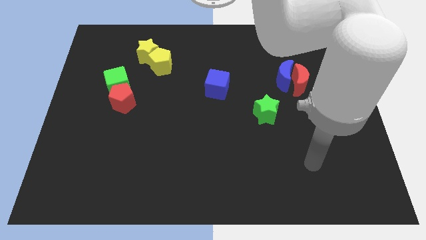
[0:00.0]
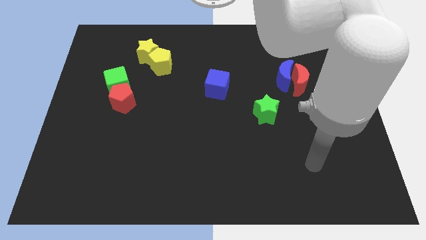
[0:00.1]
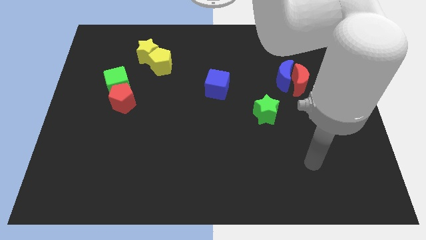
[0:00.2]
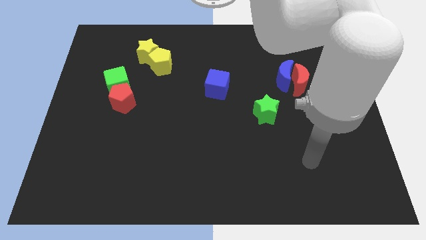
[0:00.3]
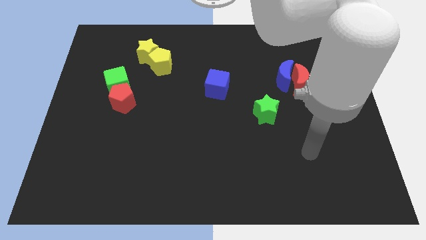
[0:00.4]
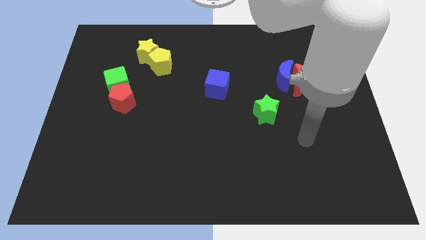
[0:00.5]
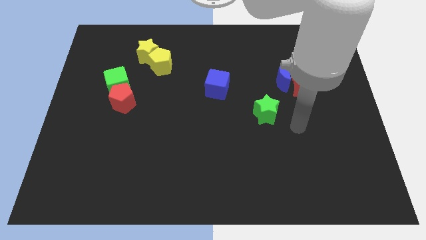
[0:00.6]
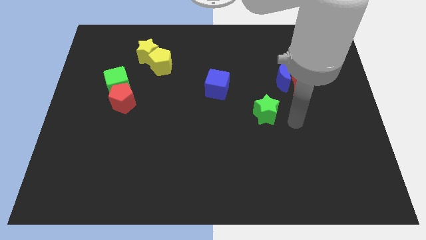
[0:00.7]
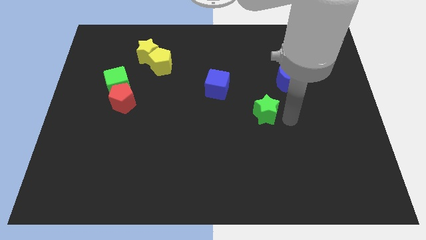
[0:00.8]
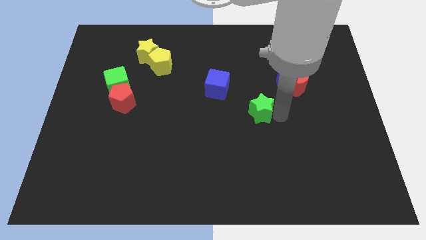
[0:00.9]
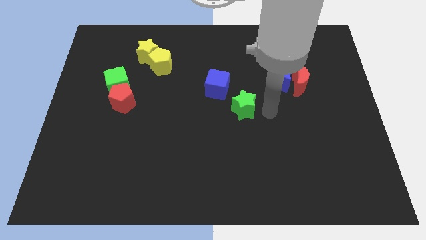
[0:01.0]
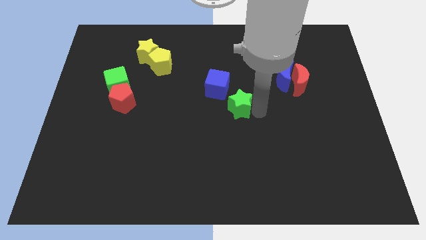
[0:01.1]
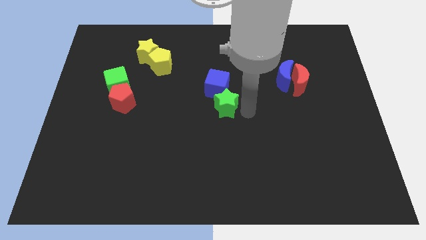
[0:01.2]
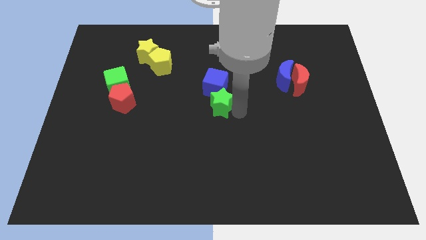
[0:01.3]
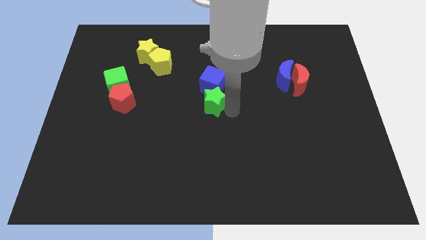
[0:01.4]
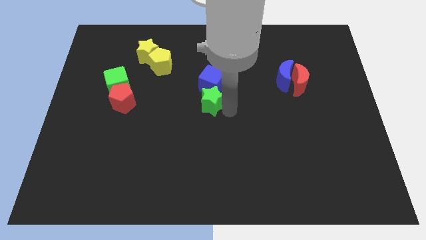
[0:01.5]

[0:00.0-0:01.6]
push the green star below the blue cube

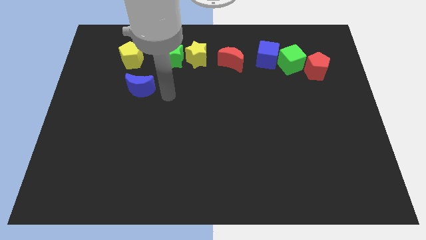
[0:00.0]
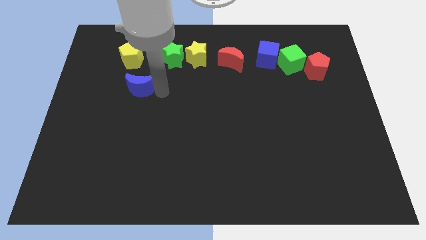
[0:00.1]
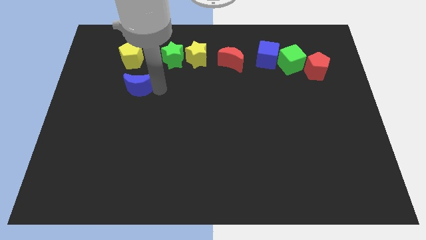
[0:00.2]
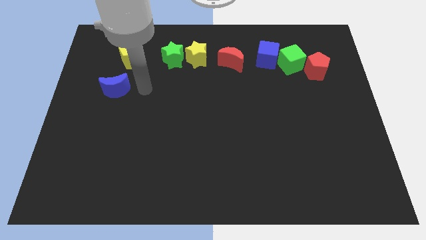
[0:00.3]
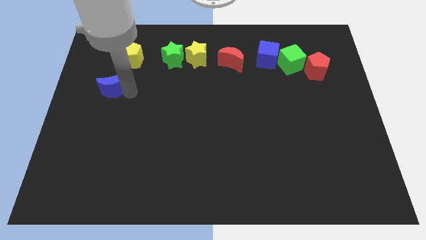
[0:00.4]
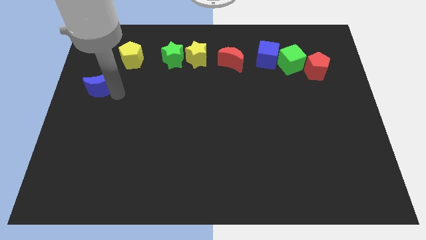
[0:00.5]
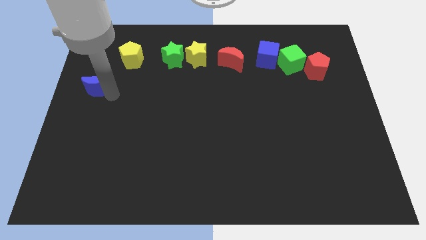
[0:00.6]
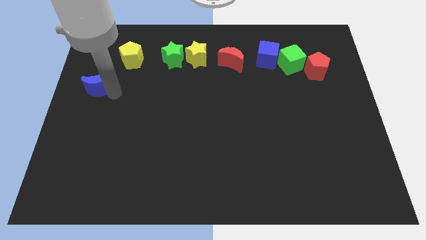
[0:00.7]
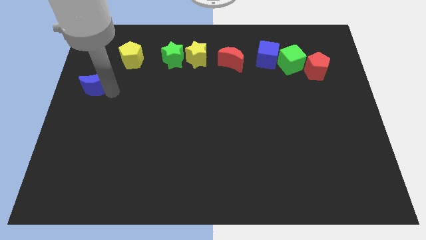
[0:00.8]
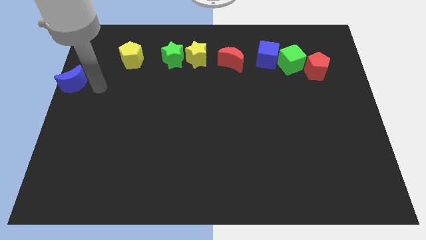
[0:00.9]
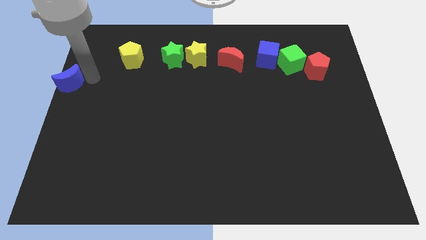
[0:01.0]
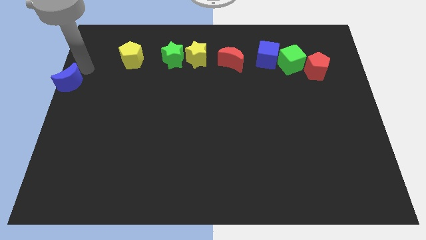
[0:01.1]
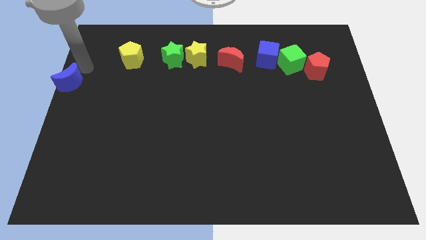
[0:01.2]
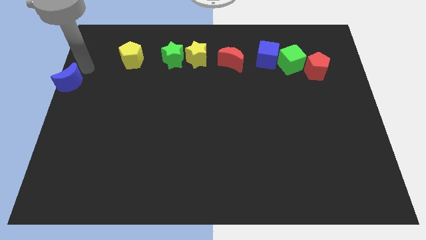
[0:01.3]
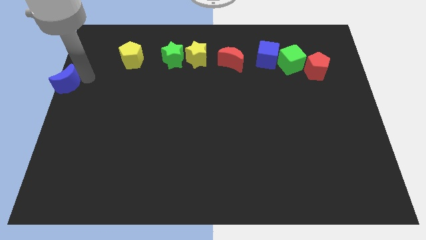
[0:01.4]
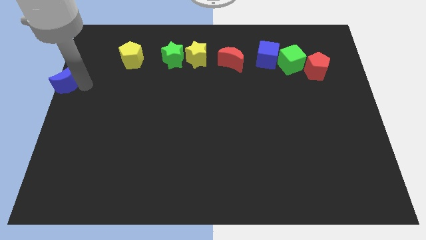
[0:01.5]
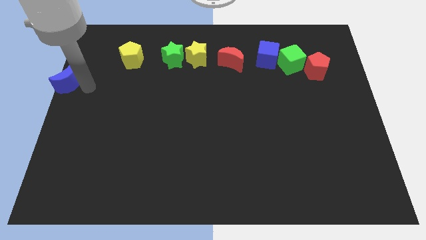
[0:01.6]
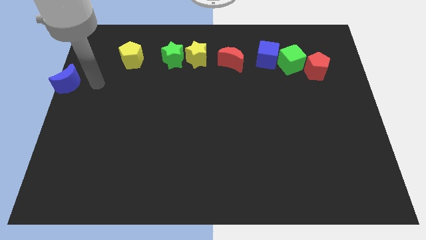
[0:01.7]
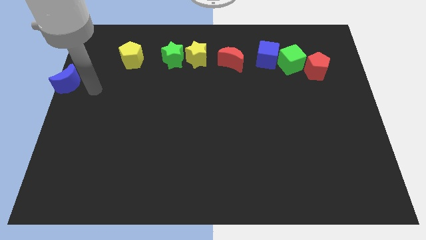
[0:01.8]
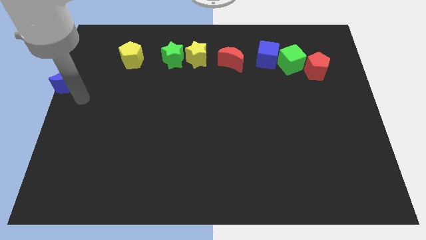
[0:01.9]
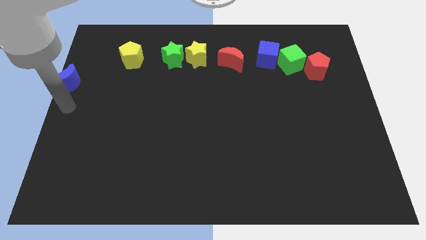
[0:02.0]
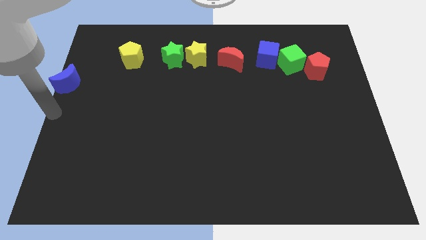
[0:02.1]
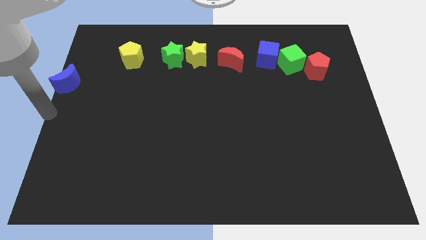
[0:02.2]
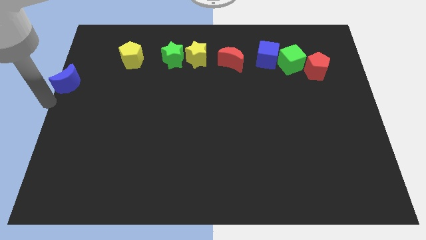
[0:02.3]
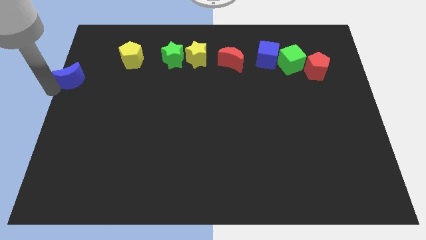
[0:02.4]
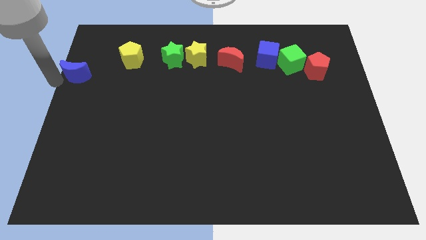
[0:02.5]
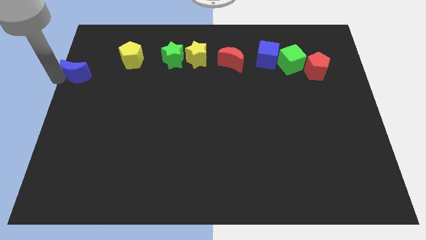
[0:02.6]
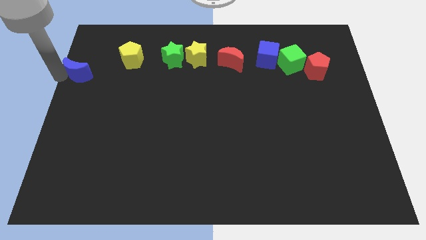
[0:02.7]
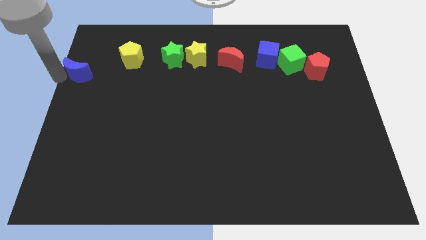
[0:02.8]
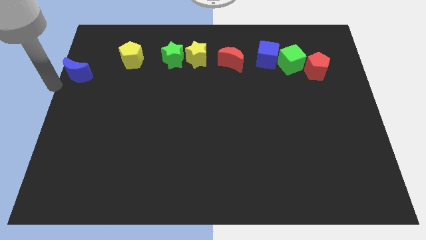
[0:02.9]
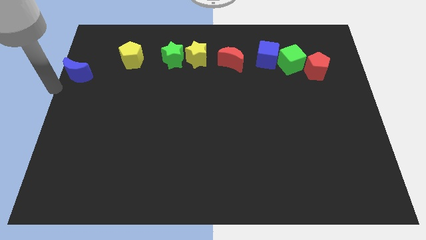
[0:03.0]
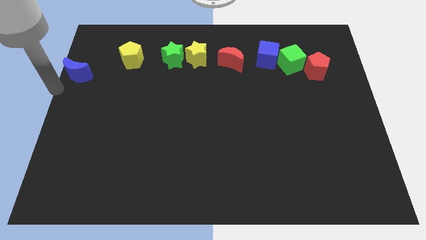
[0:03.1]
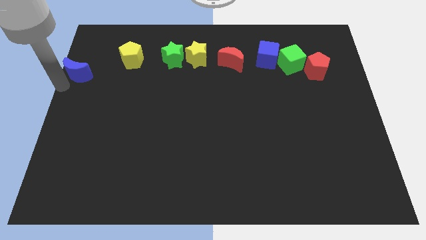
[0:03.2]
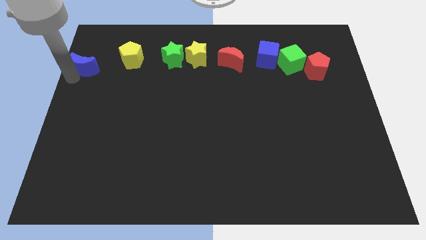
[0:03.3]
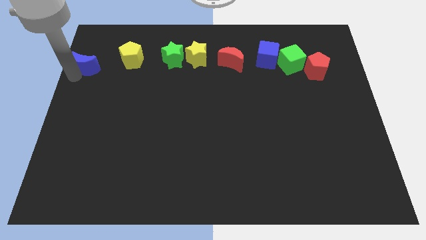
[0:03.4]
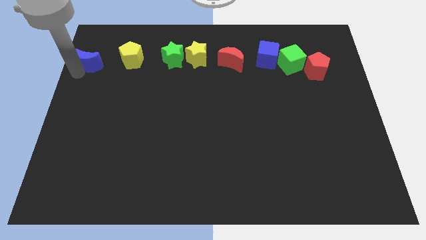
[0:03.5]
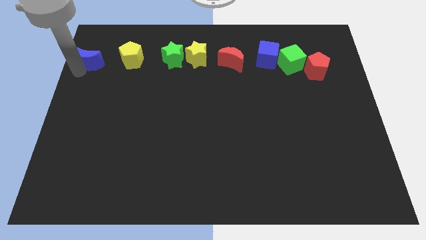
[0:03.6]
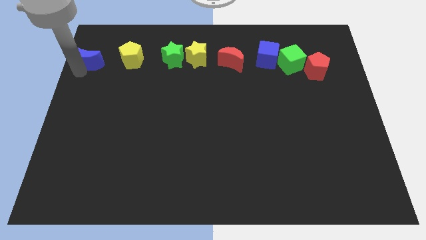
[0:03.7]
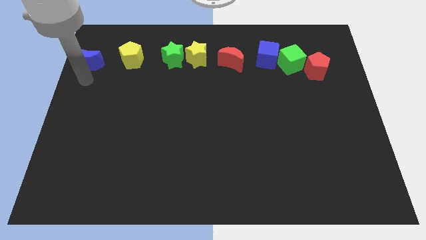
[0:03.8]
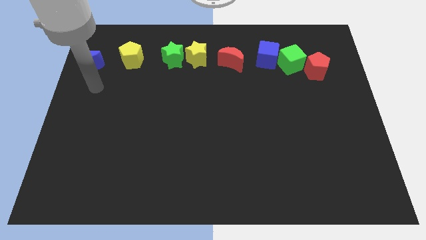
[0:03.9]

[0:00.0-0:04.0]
move the blue moon to the left of the yellow pentagon

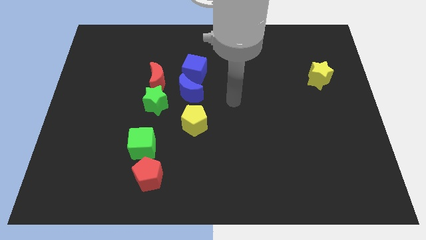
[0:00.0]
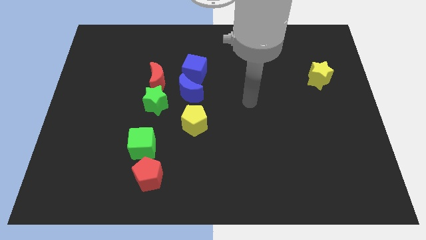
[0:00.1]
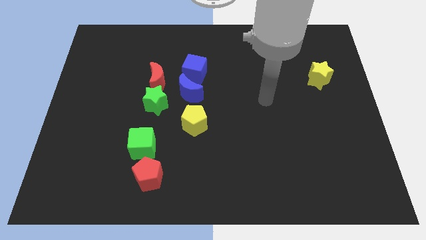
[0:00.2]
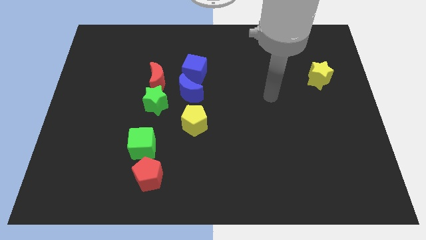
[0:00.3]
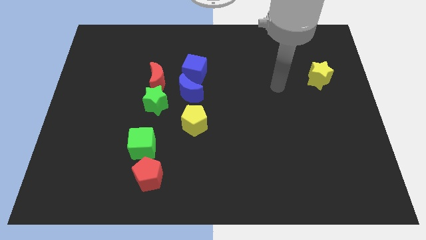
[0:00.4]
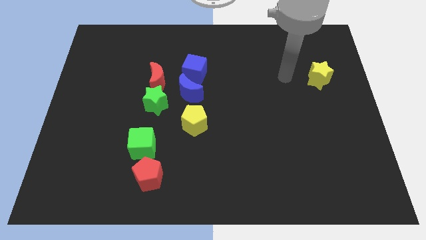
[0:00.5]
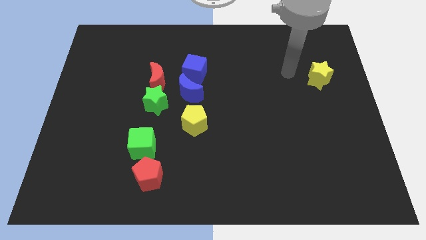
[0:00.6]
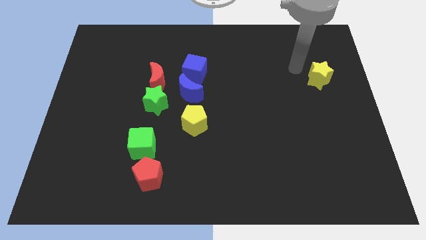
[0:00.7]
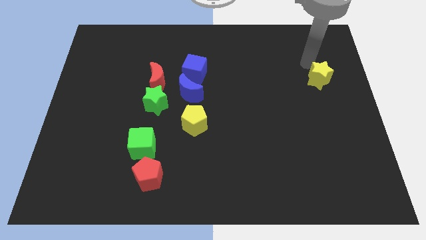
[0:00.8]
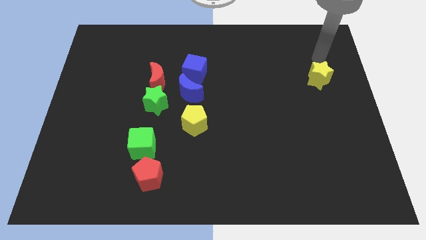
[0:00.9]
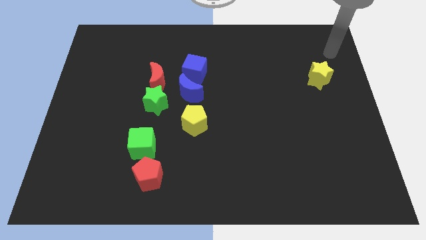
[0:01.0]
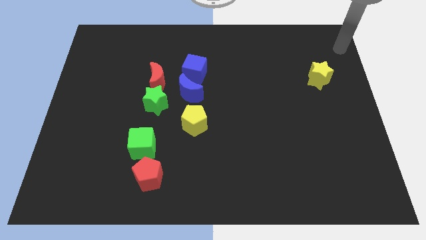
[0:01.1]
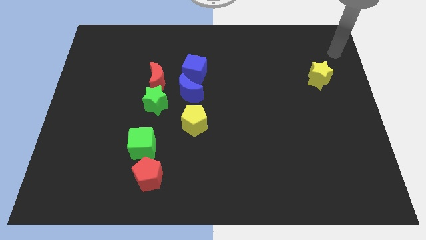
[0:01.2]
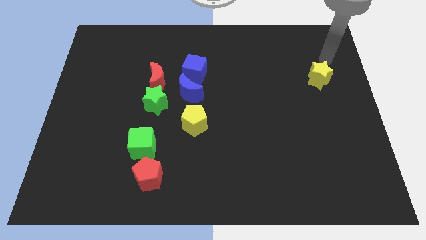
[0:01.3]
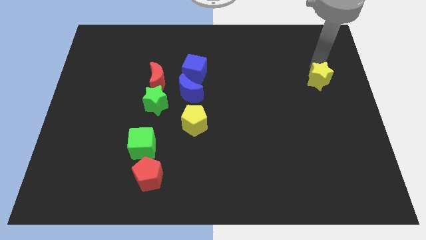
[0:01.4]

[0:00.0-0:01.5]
point the arm above the yellow star

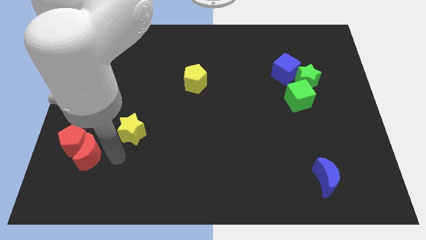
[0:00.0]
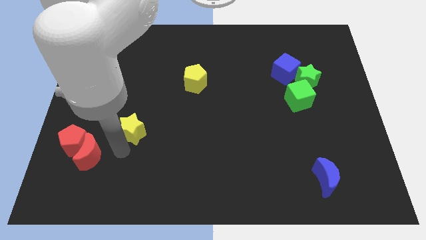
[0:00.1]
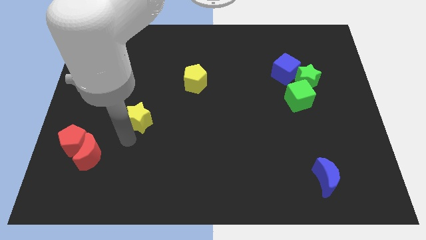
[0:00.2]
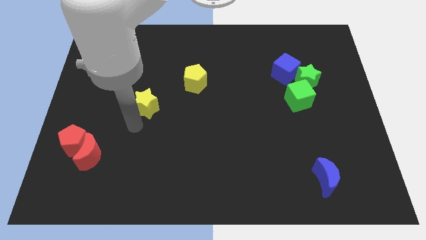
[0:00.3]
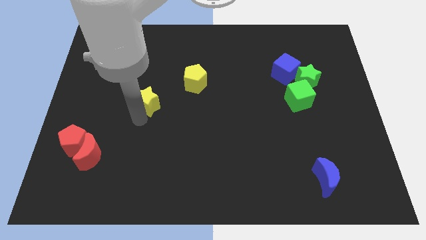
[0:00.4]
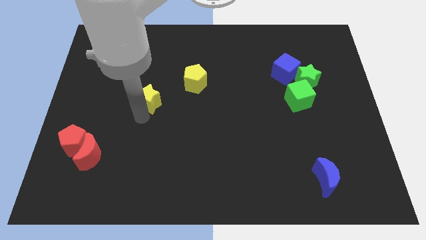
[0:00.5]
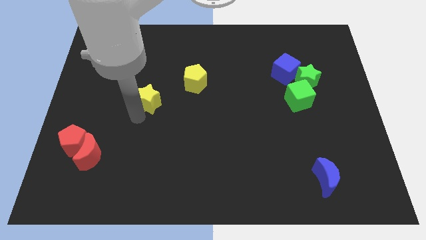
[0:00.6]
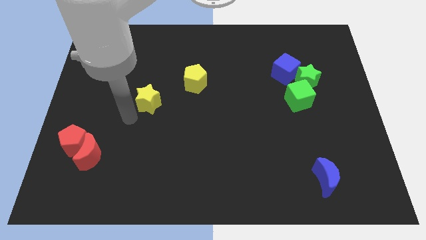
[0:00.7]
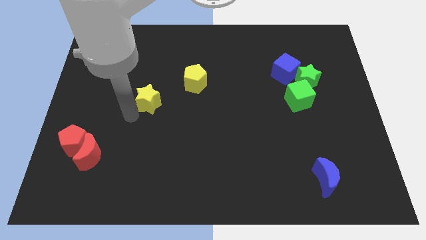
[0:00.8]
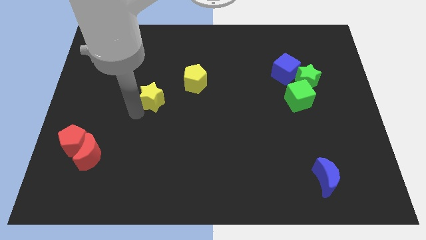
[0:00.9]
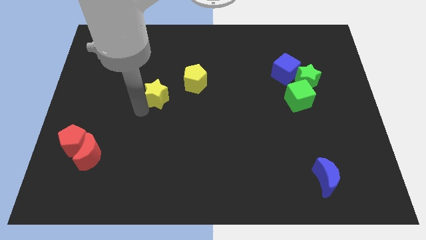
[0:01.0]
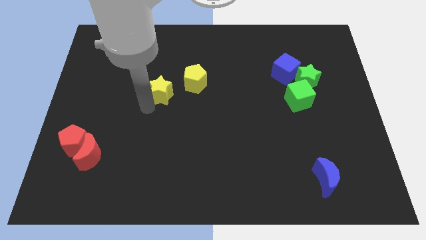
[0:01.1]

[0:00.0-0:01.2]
move the yellow star parallel left to the green cube

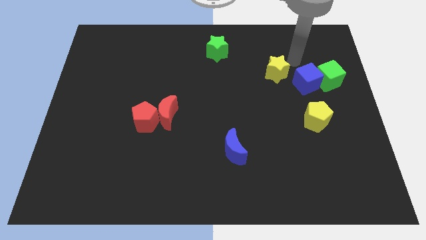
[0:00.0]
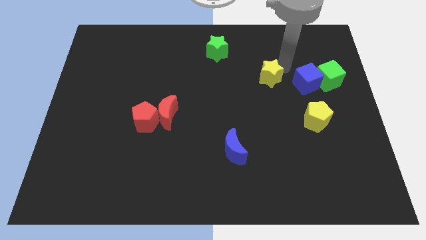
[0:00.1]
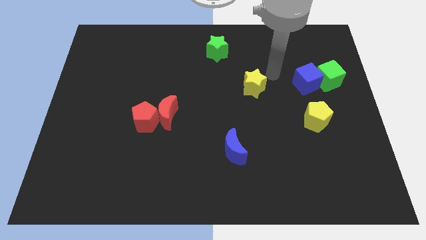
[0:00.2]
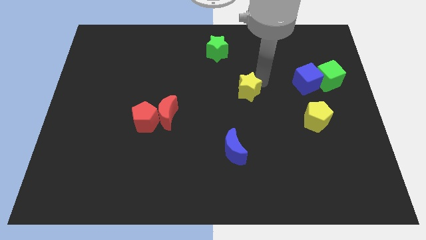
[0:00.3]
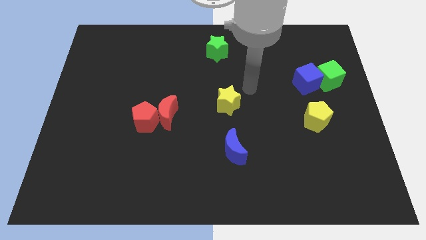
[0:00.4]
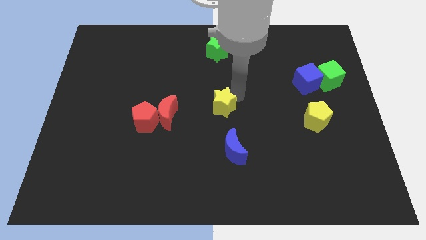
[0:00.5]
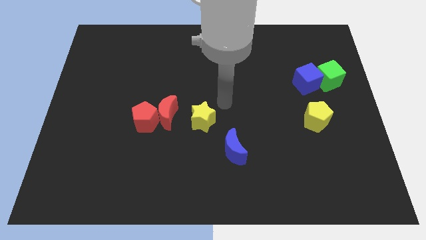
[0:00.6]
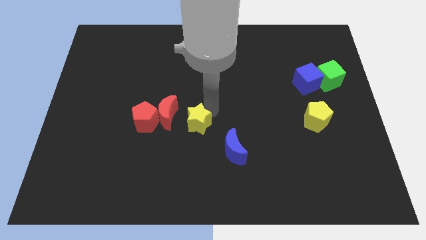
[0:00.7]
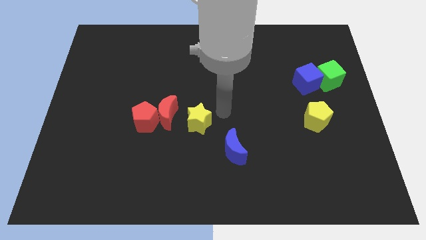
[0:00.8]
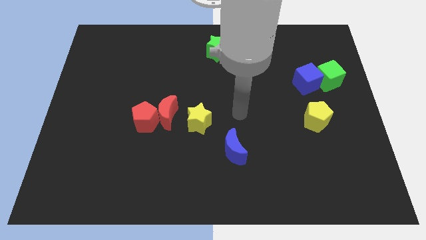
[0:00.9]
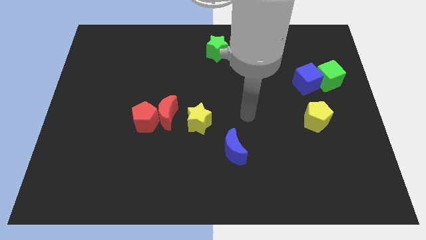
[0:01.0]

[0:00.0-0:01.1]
place the yellow star in between the red moon and yellow pentagon
